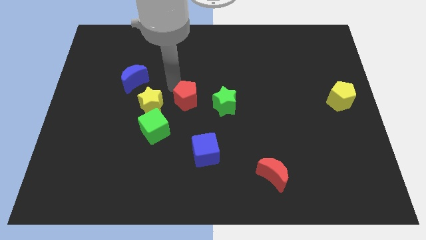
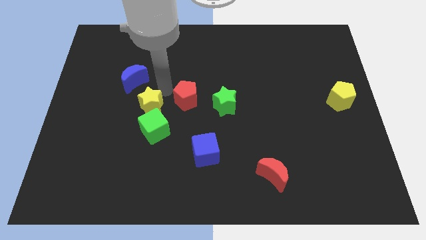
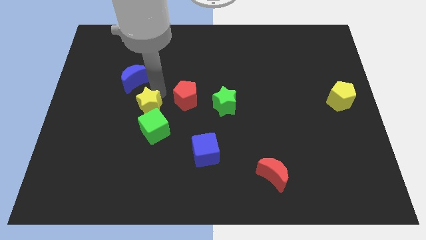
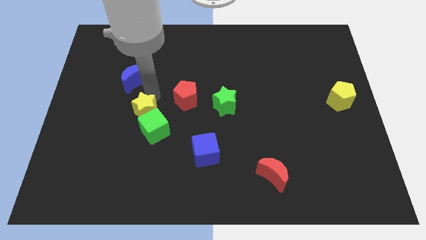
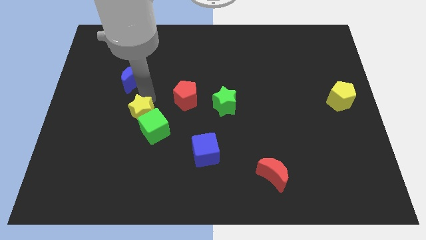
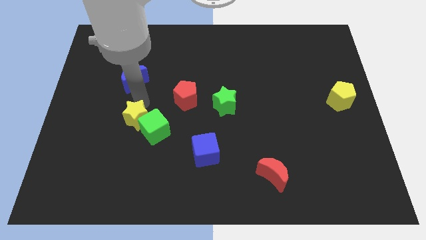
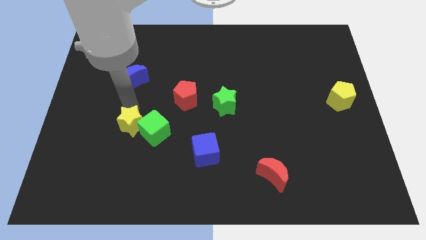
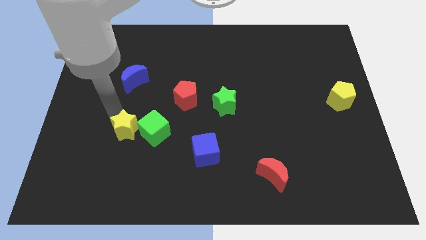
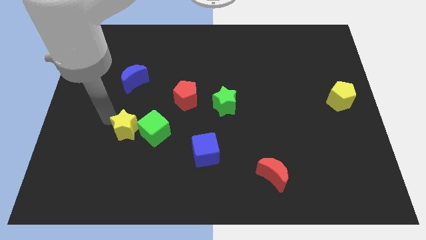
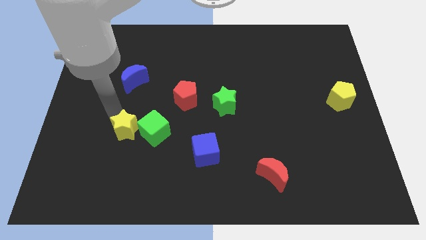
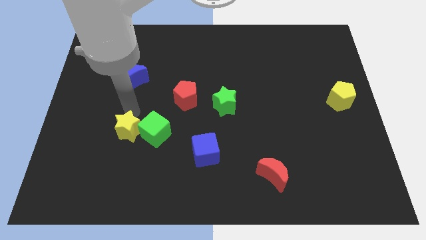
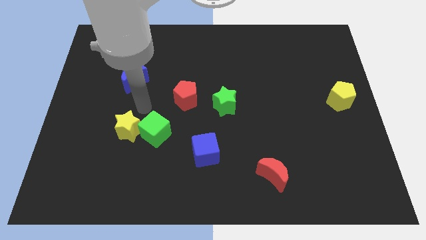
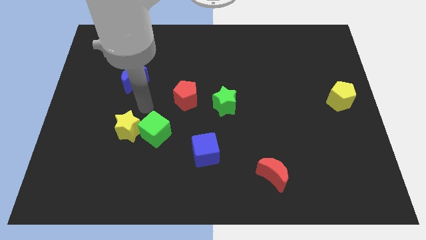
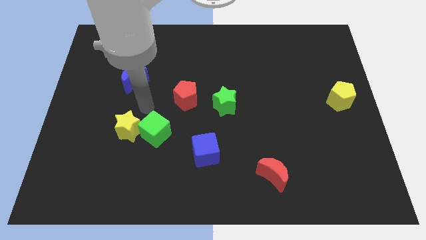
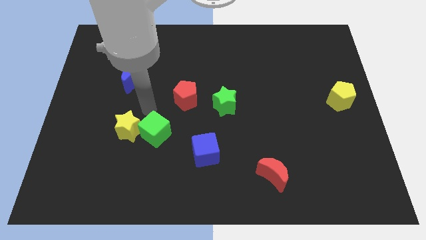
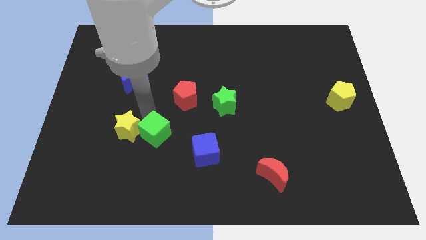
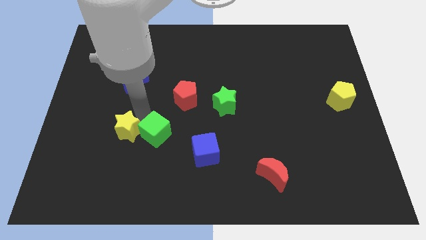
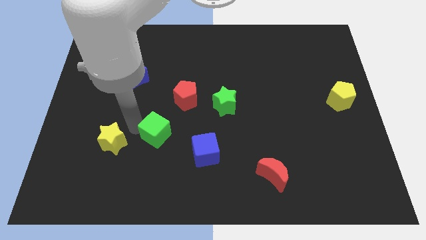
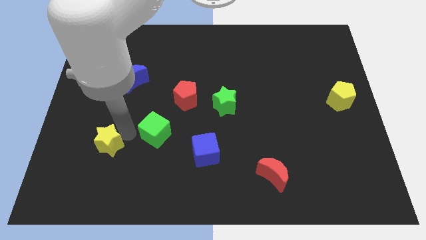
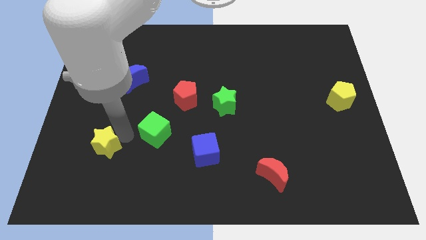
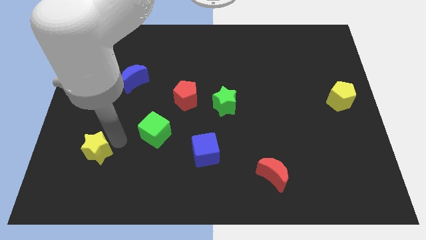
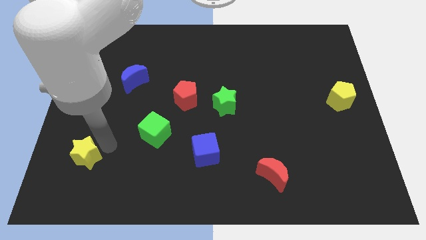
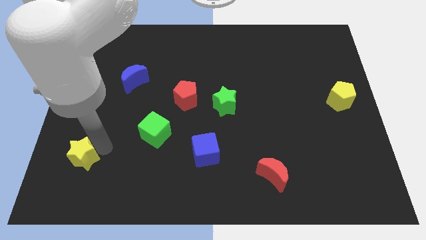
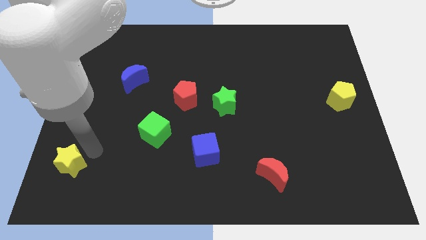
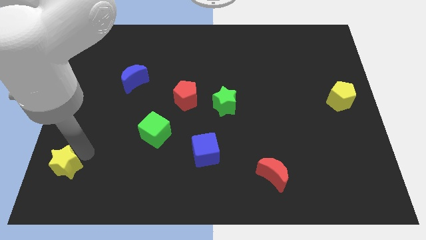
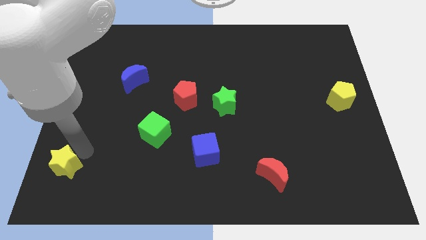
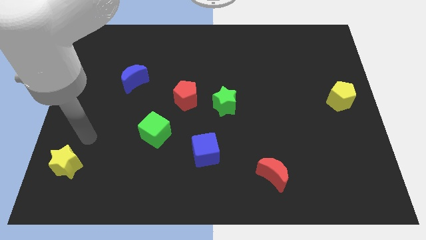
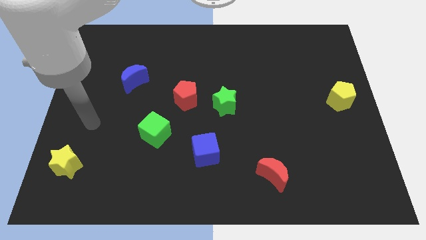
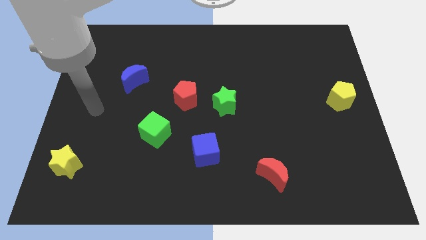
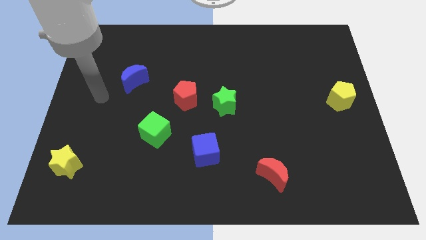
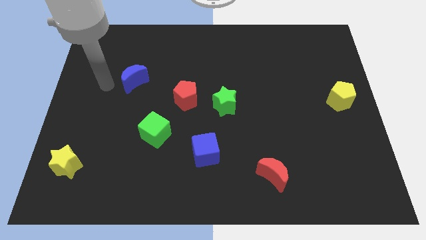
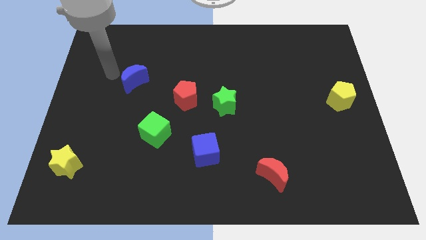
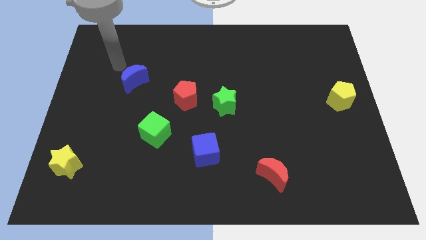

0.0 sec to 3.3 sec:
separate the yellow star from the green cube

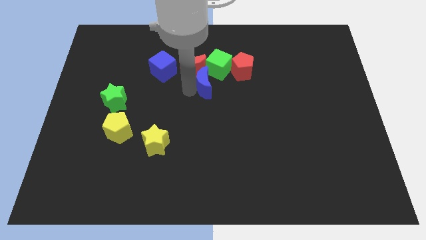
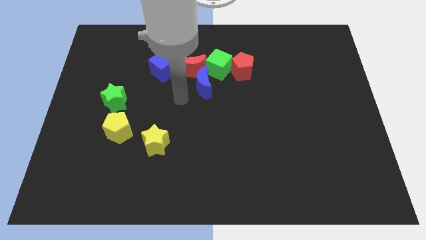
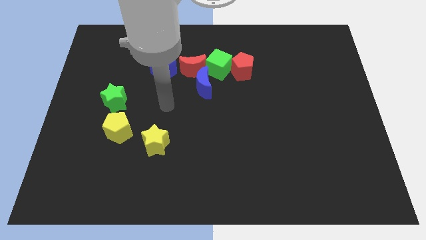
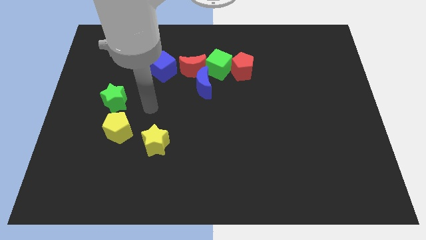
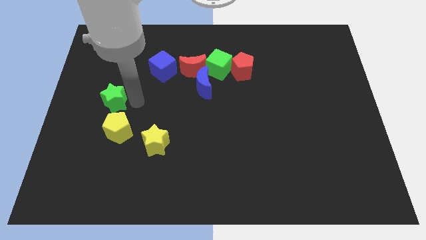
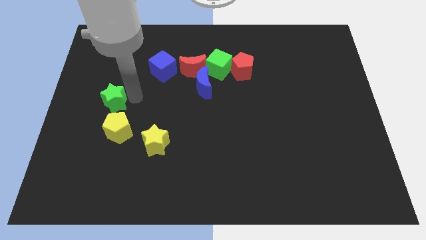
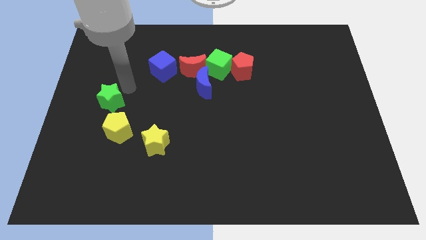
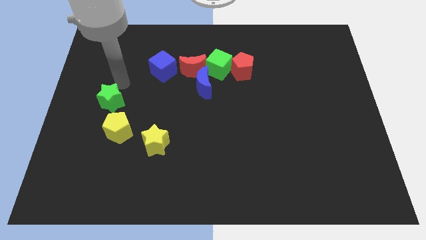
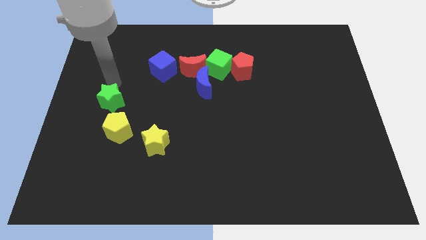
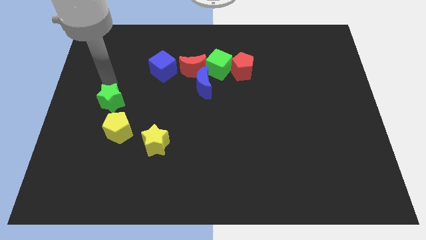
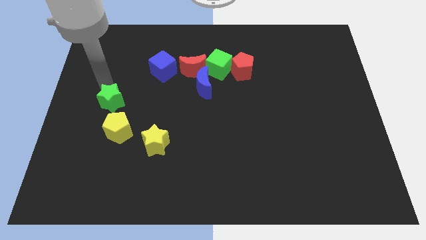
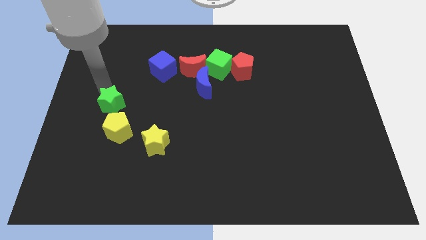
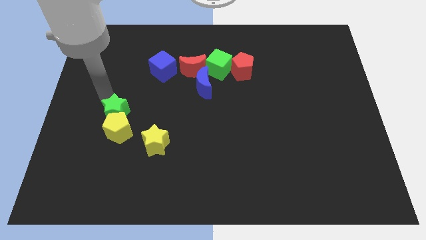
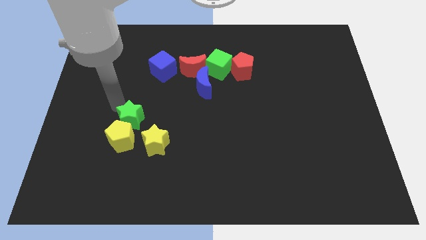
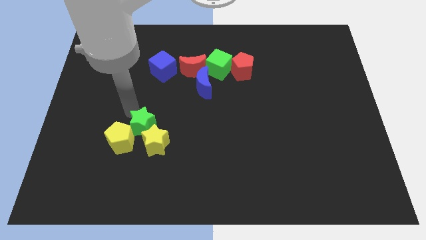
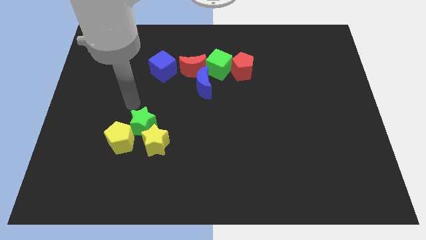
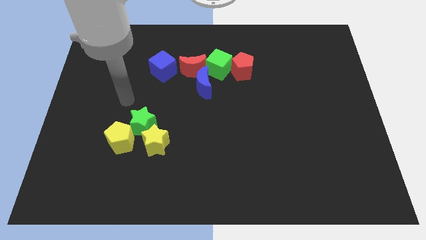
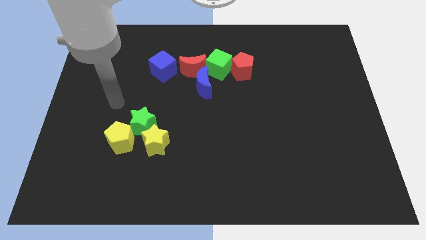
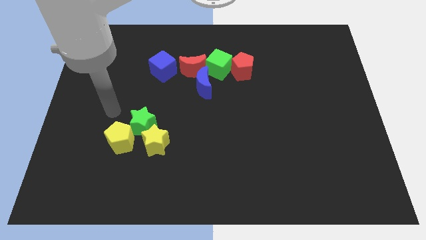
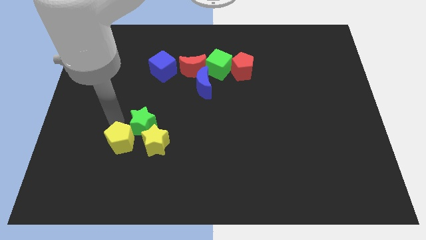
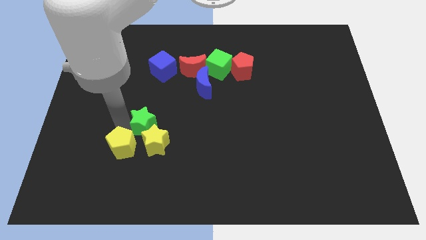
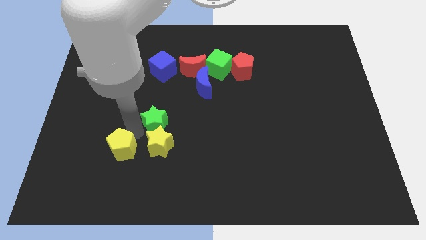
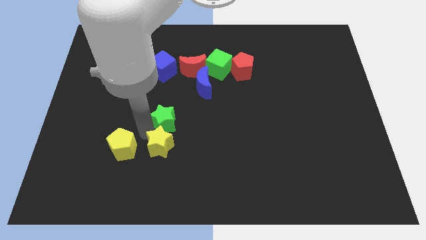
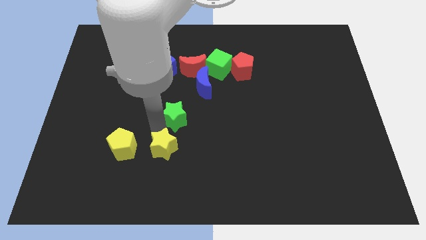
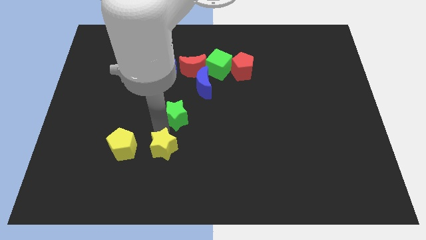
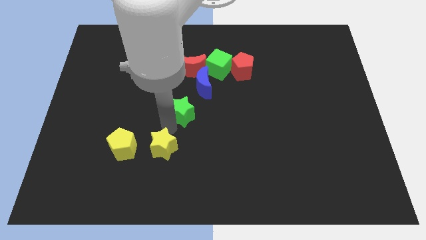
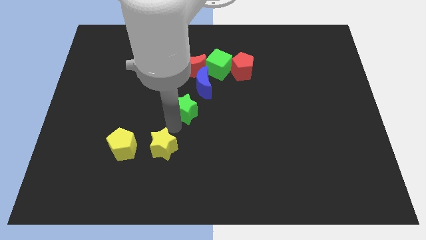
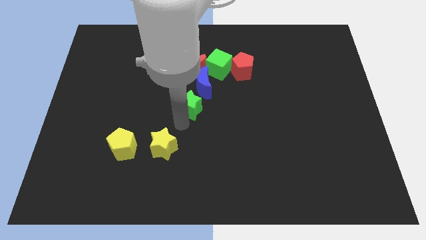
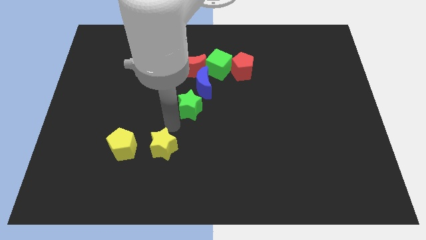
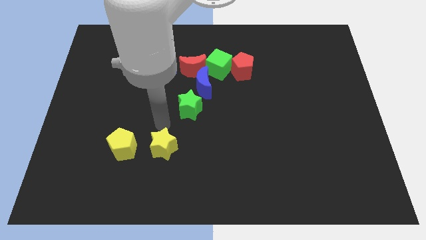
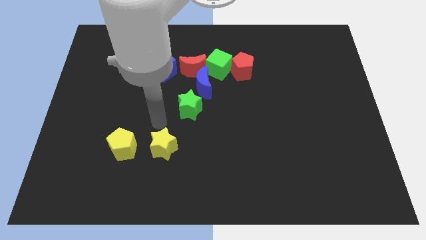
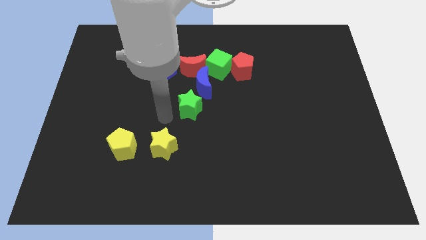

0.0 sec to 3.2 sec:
place the green star above the yellow star

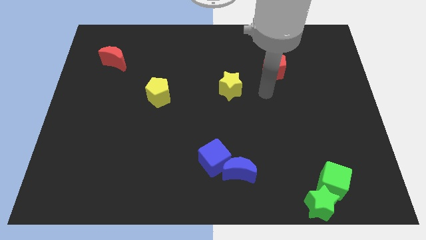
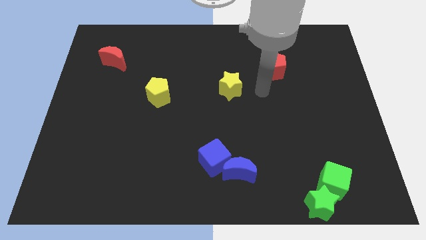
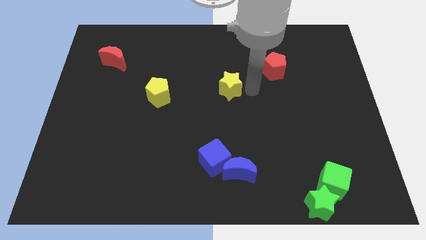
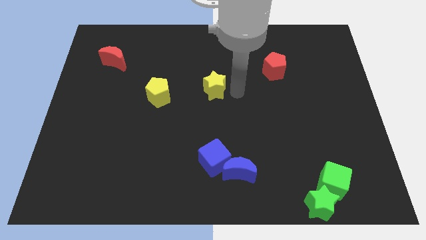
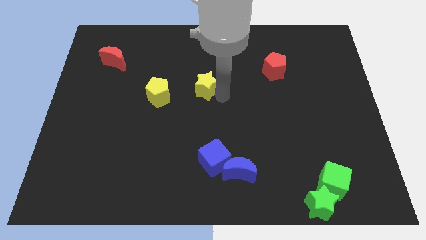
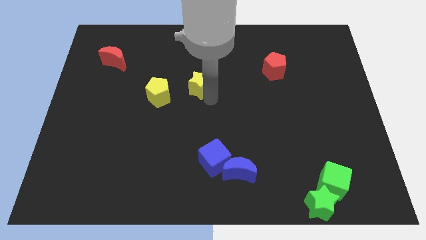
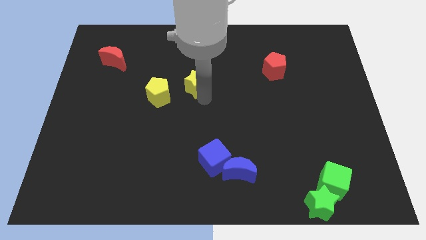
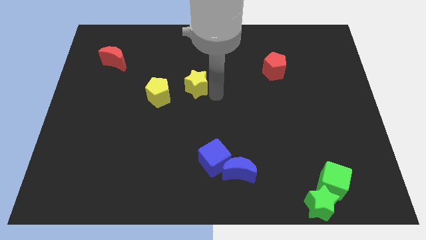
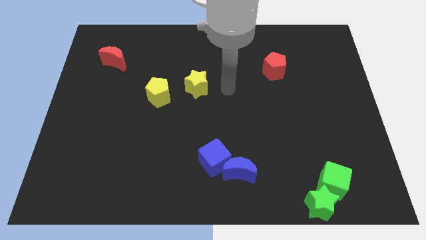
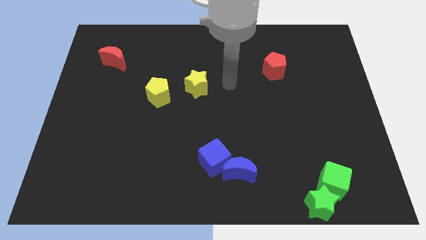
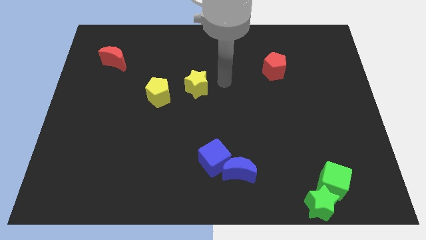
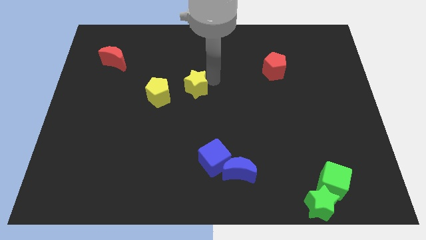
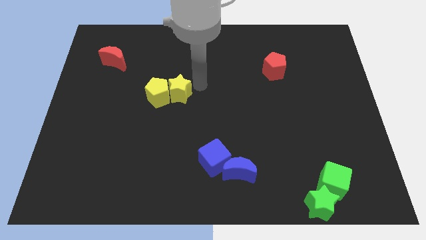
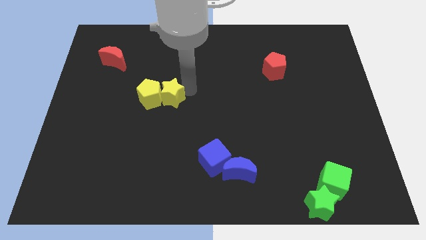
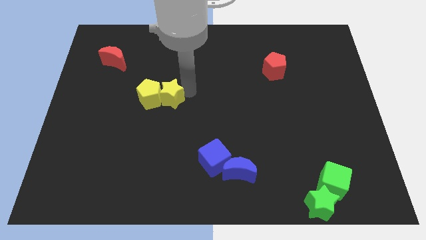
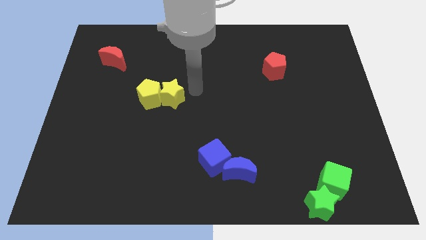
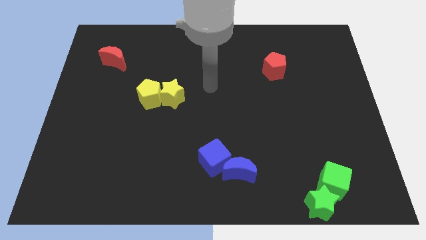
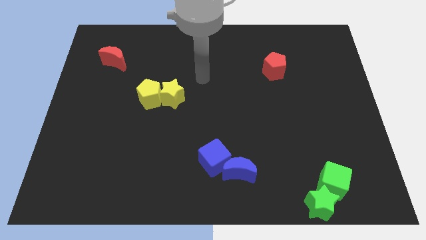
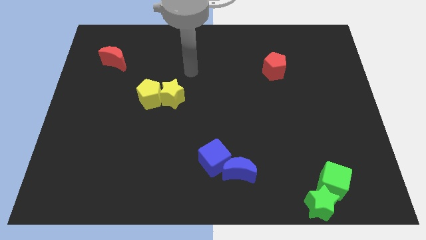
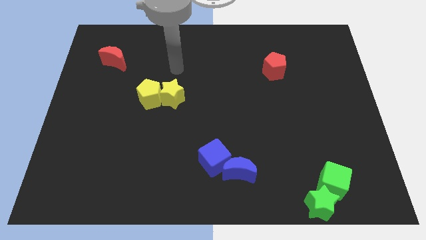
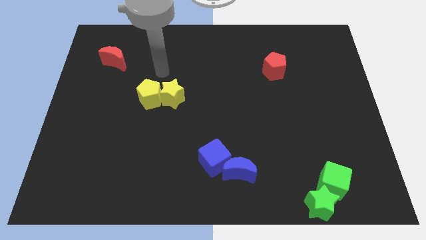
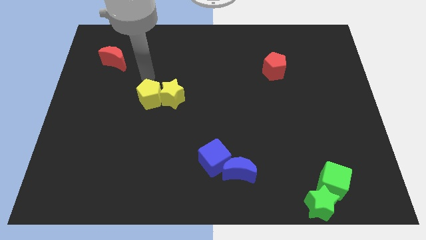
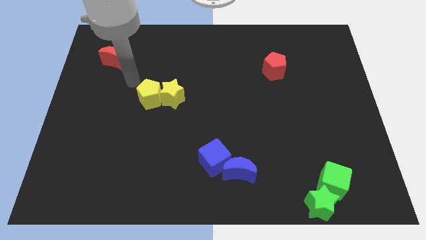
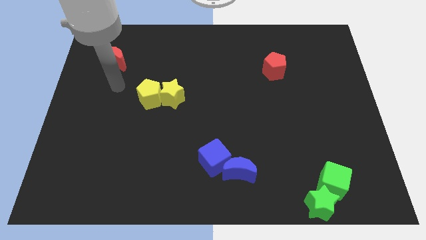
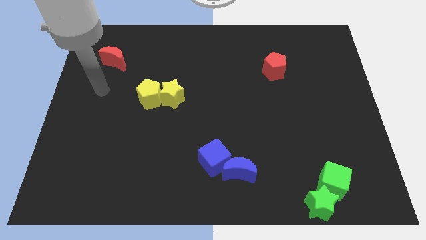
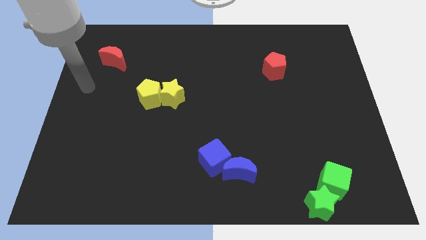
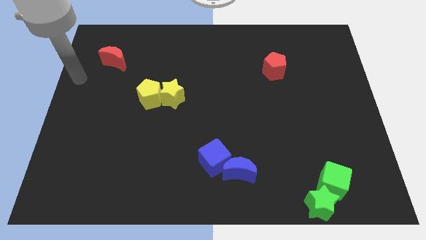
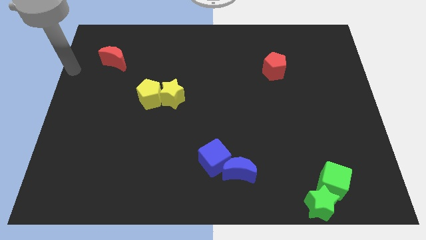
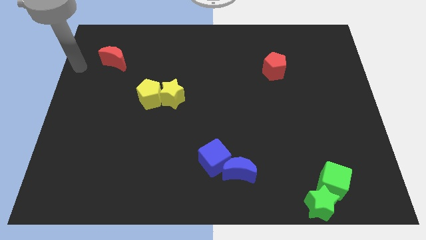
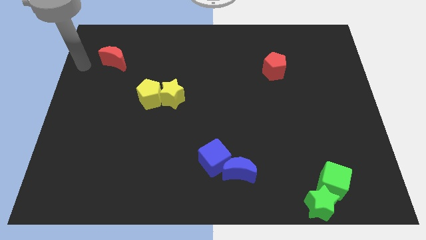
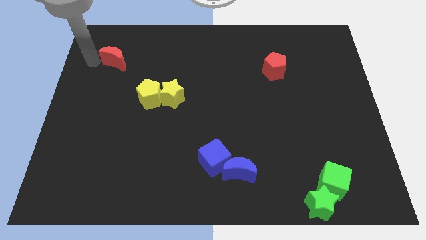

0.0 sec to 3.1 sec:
place the yellow star to the right of the yellow pentagon
